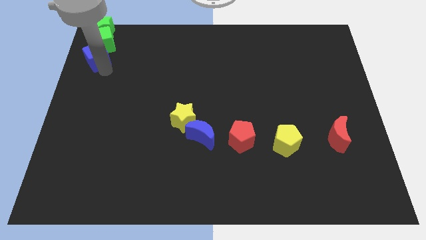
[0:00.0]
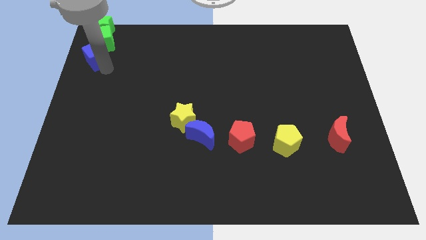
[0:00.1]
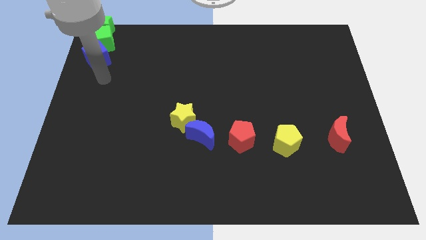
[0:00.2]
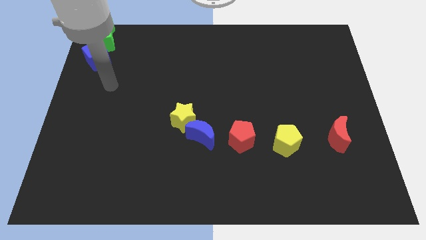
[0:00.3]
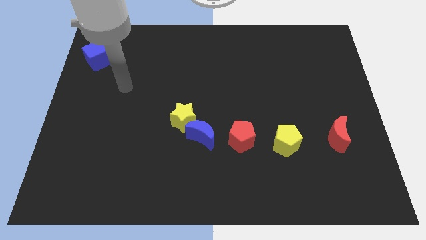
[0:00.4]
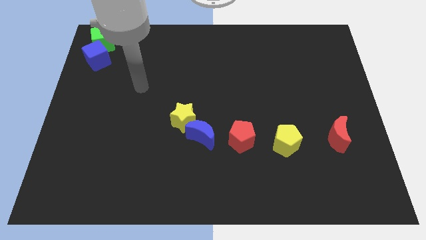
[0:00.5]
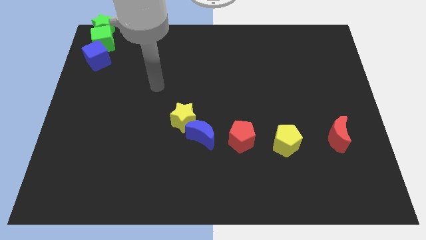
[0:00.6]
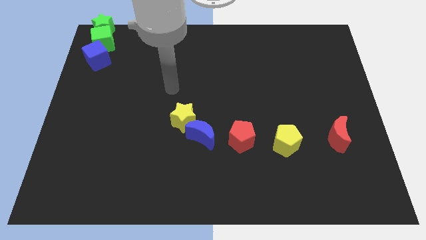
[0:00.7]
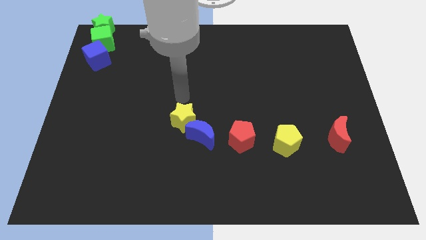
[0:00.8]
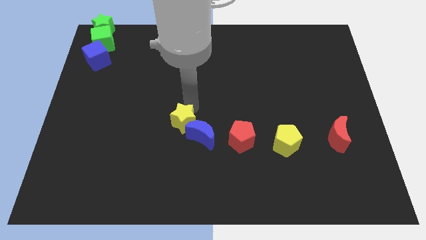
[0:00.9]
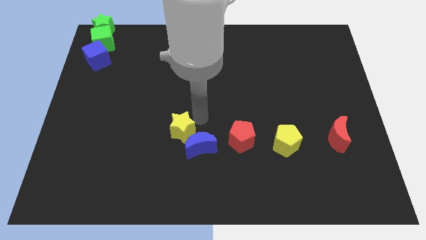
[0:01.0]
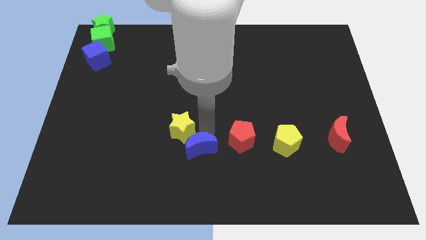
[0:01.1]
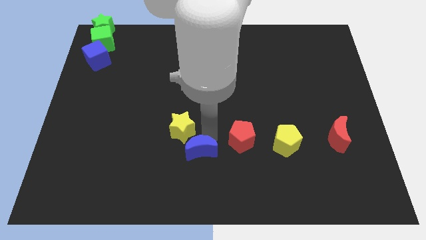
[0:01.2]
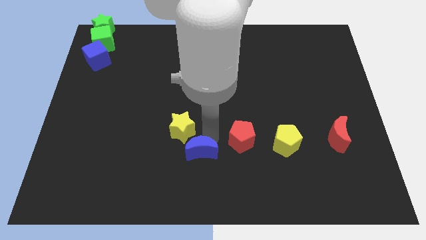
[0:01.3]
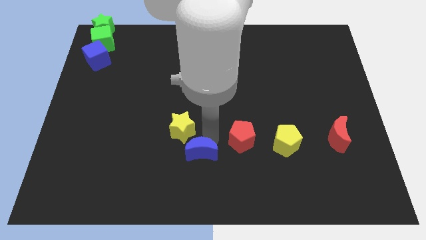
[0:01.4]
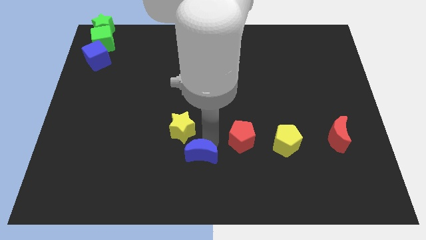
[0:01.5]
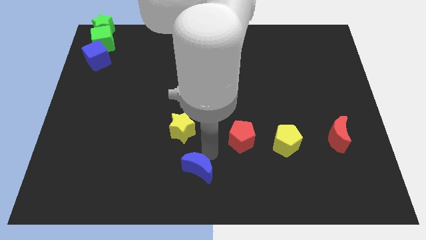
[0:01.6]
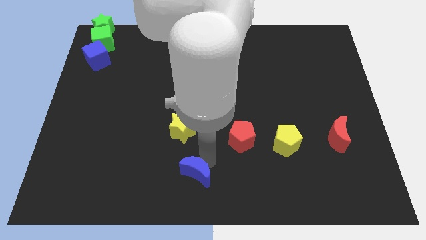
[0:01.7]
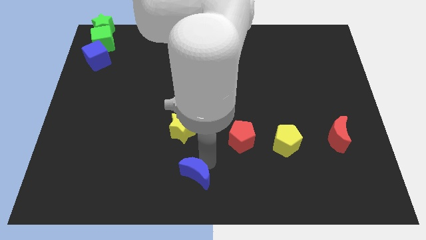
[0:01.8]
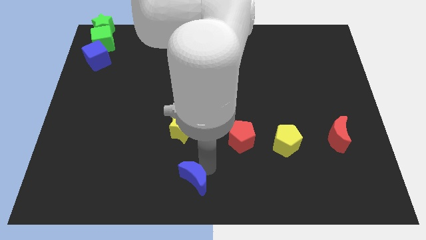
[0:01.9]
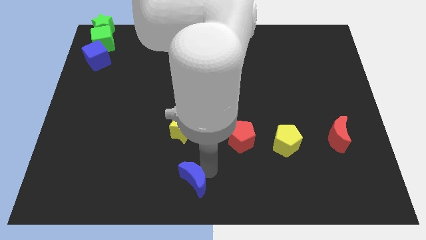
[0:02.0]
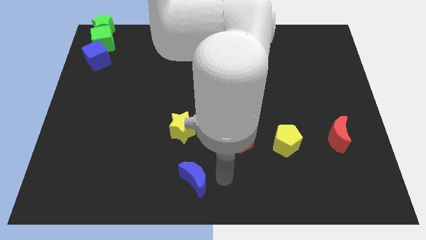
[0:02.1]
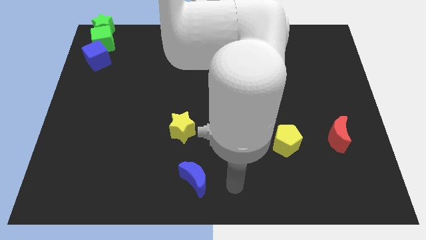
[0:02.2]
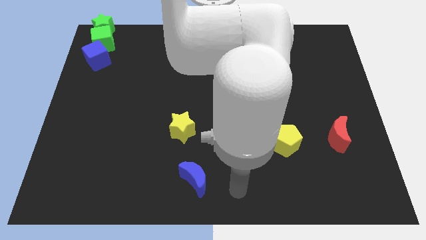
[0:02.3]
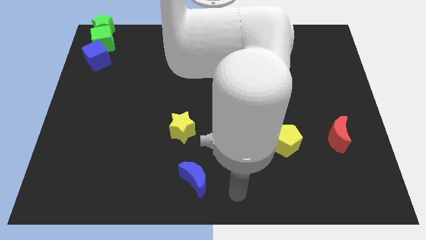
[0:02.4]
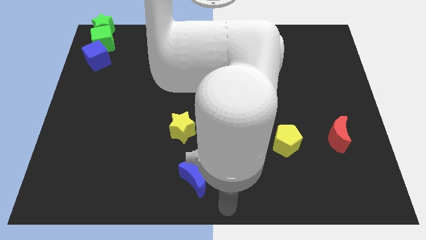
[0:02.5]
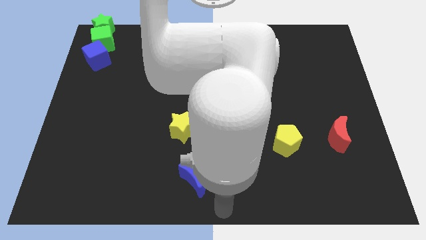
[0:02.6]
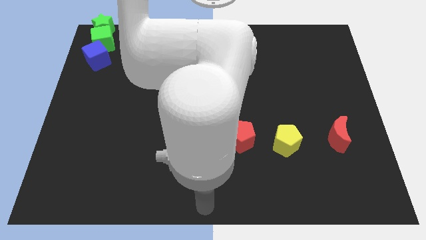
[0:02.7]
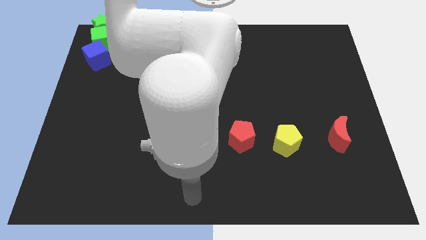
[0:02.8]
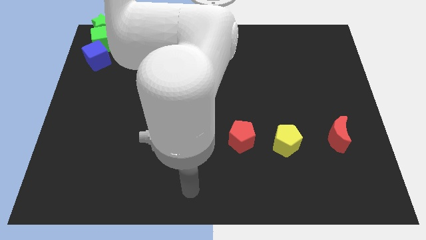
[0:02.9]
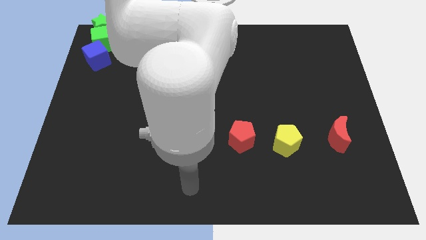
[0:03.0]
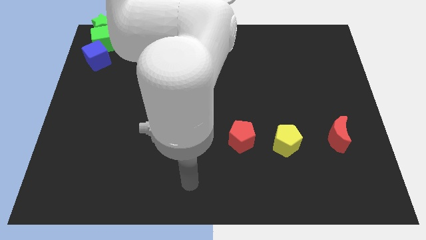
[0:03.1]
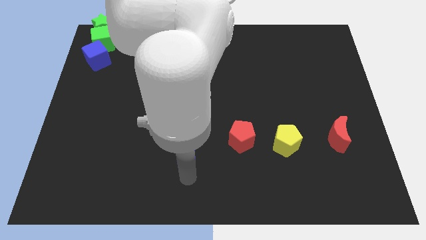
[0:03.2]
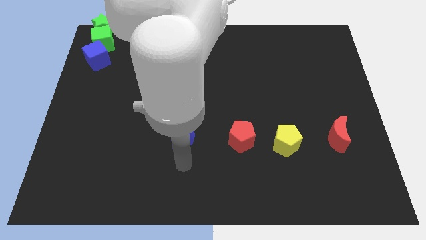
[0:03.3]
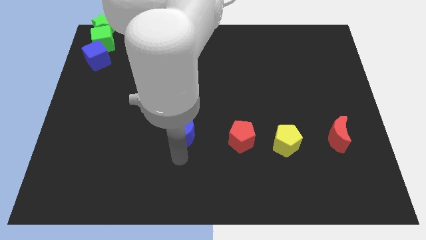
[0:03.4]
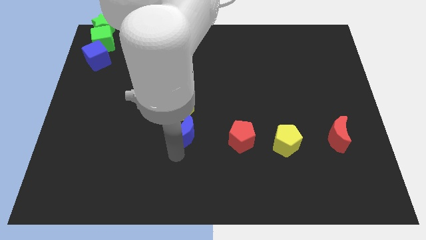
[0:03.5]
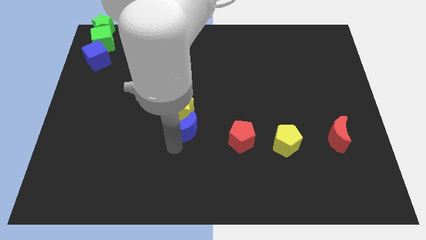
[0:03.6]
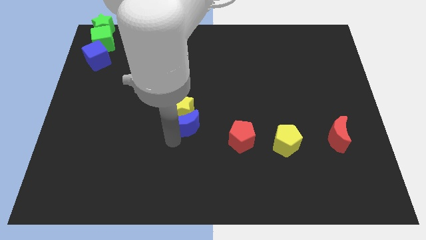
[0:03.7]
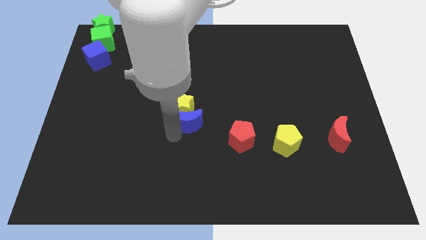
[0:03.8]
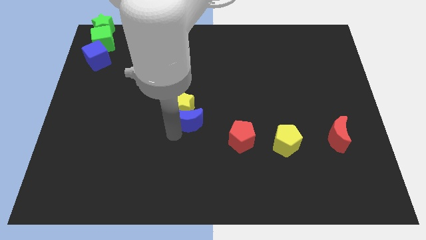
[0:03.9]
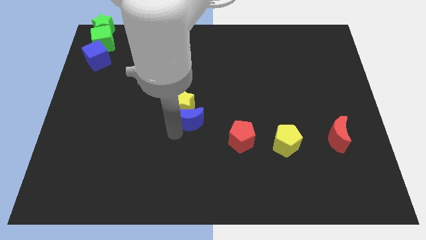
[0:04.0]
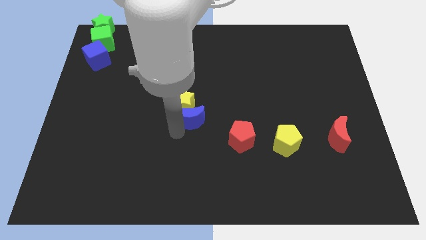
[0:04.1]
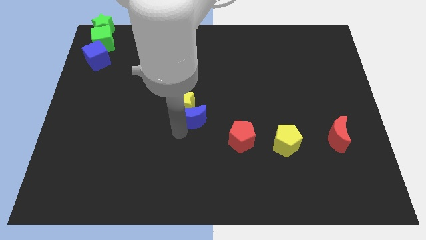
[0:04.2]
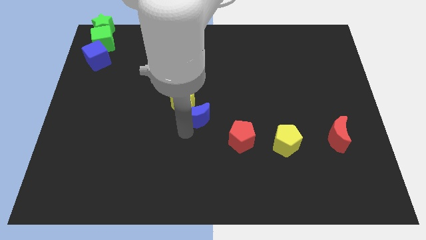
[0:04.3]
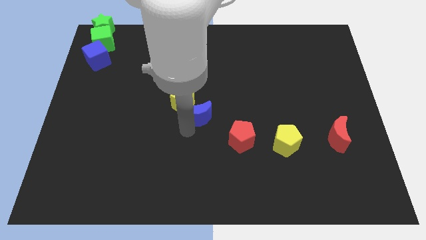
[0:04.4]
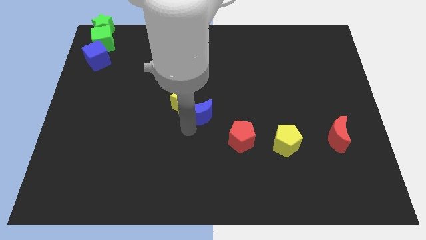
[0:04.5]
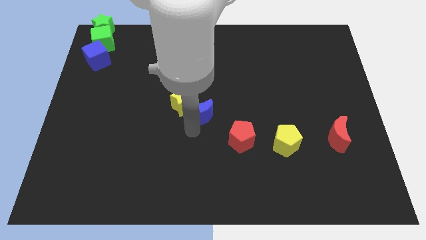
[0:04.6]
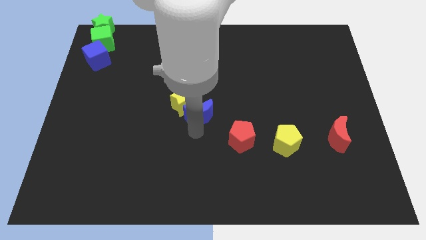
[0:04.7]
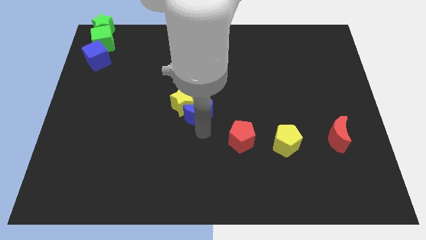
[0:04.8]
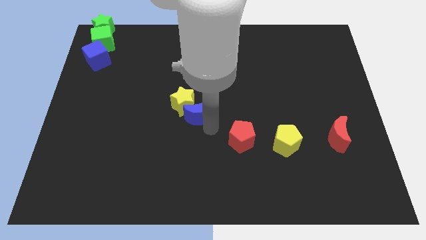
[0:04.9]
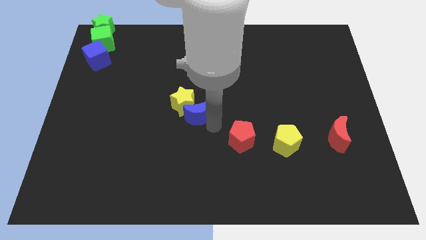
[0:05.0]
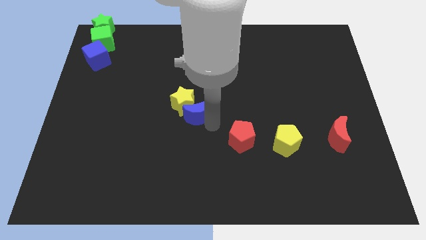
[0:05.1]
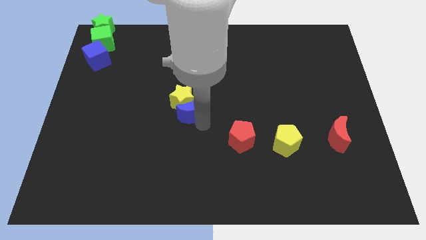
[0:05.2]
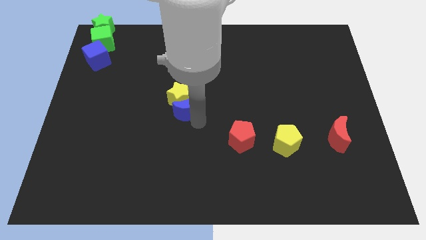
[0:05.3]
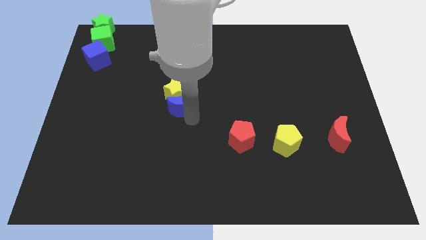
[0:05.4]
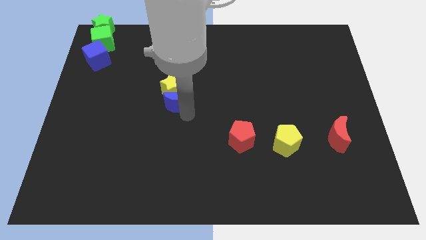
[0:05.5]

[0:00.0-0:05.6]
move the blue moon and yellow star to the top side of the board

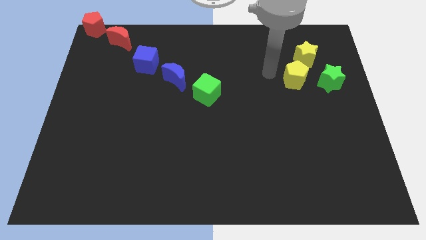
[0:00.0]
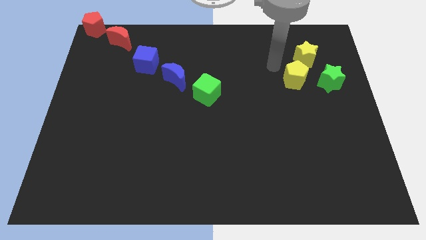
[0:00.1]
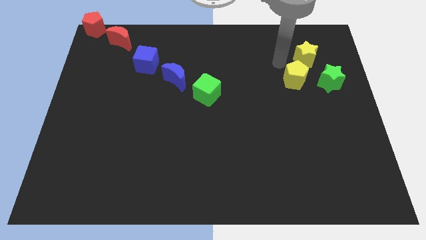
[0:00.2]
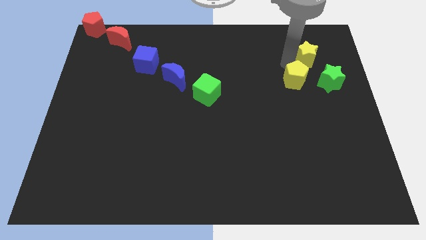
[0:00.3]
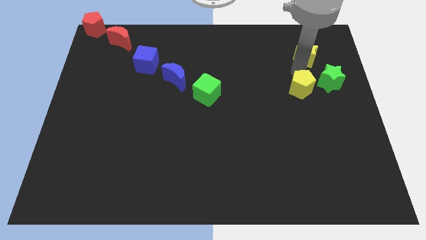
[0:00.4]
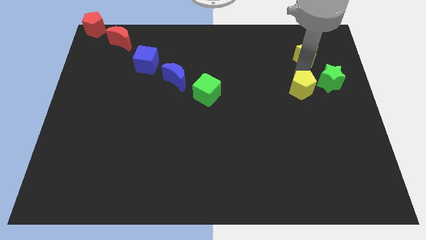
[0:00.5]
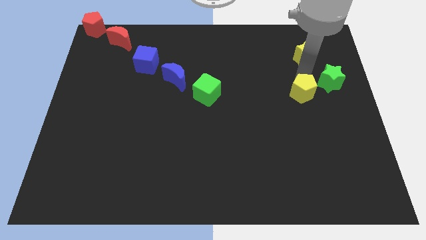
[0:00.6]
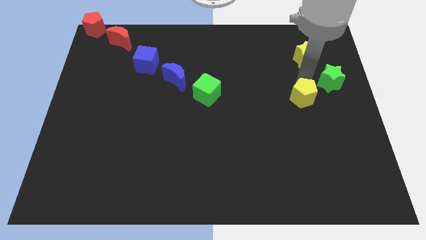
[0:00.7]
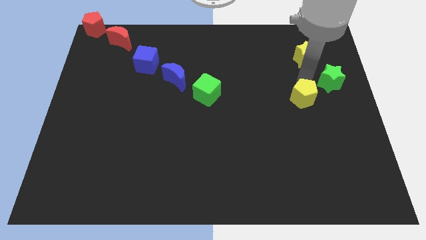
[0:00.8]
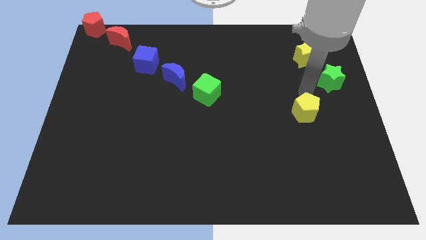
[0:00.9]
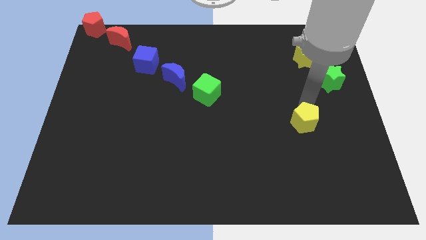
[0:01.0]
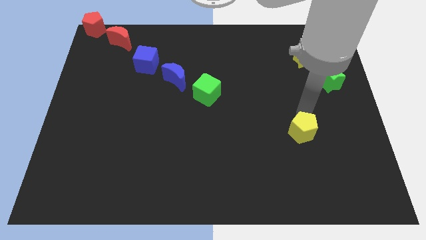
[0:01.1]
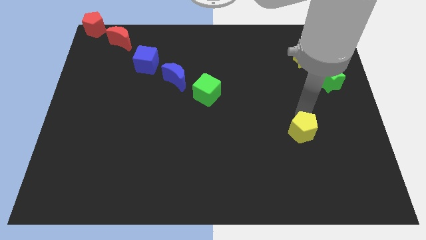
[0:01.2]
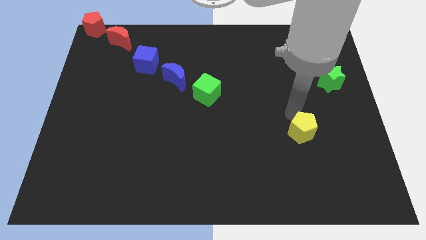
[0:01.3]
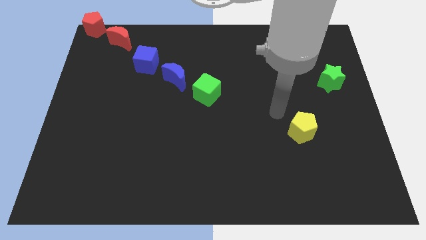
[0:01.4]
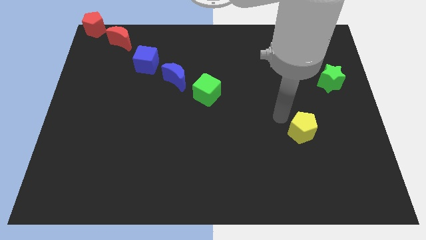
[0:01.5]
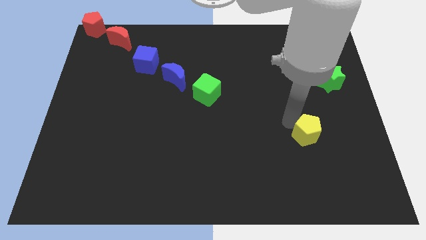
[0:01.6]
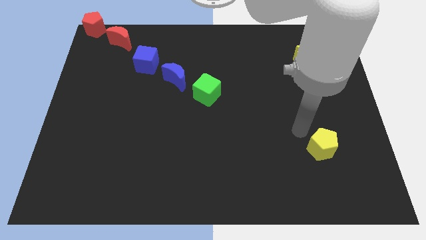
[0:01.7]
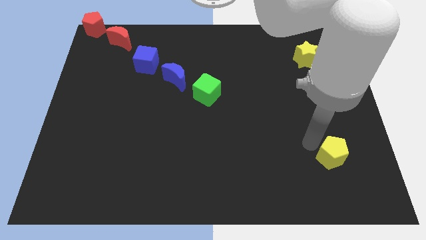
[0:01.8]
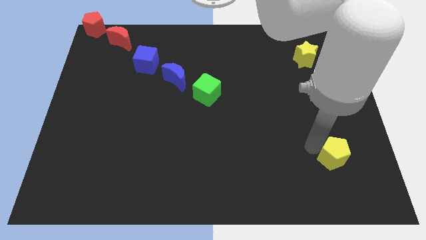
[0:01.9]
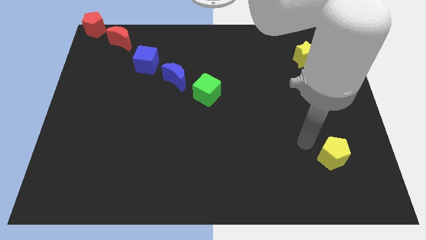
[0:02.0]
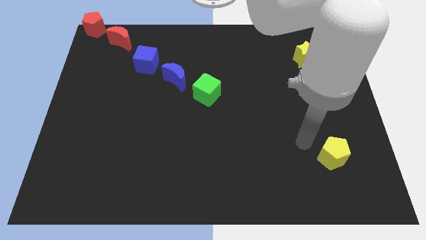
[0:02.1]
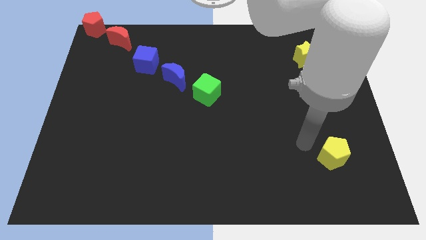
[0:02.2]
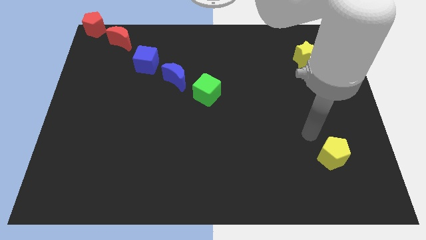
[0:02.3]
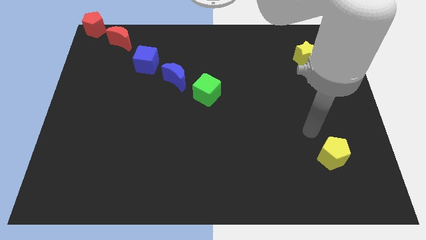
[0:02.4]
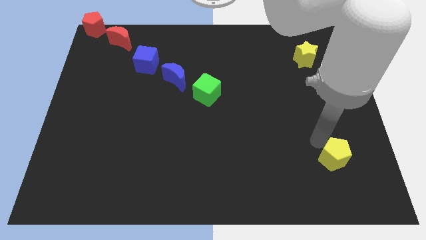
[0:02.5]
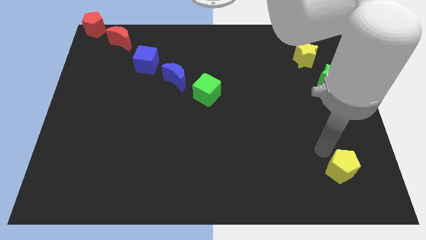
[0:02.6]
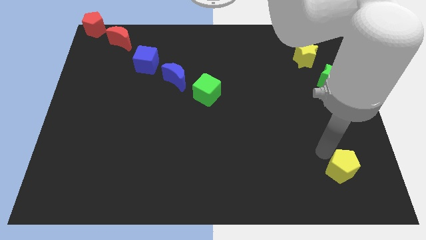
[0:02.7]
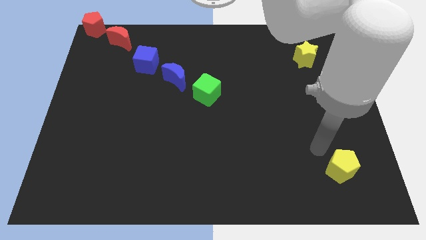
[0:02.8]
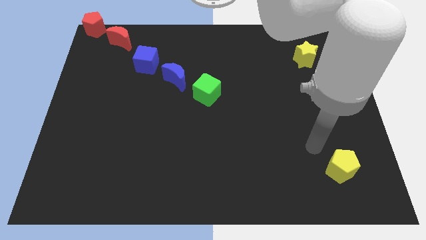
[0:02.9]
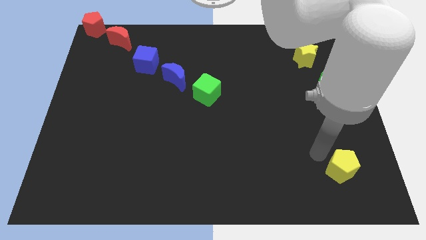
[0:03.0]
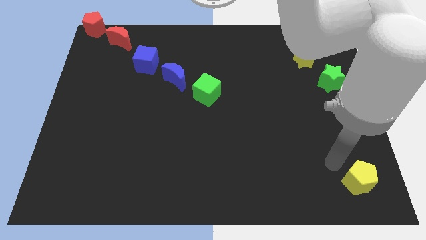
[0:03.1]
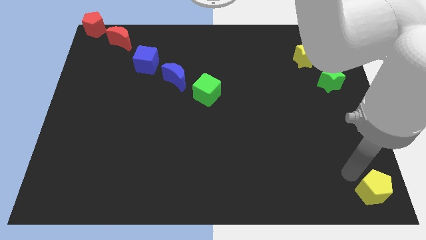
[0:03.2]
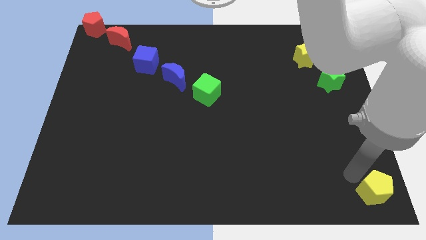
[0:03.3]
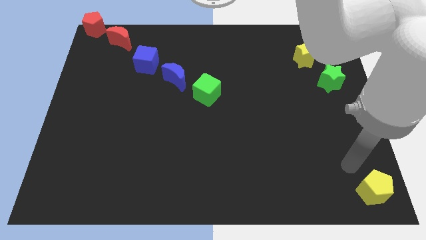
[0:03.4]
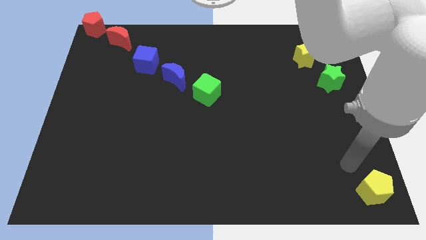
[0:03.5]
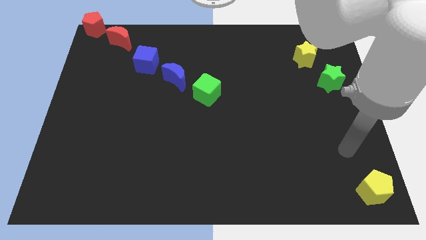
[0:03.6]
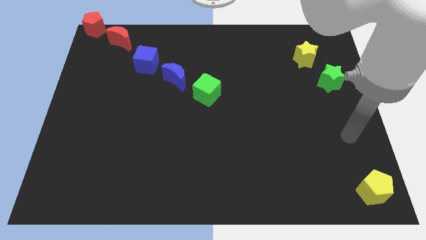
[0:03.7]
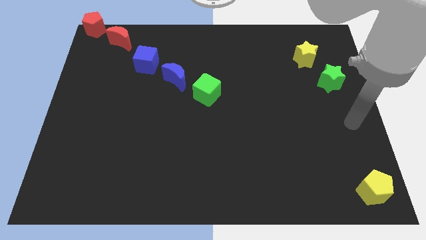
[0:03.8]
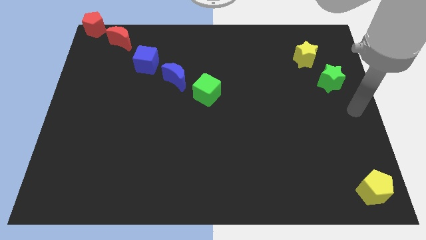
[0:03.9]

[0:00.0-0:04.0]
push the yellow pentagon towards the bottom right corner of the board
